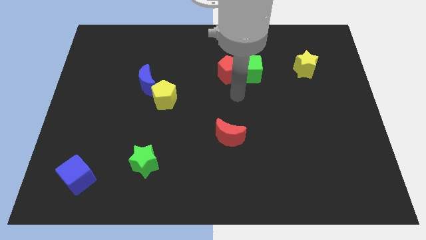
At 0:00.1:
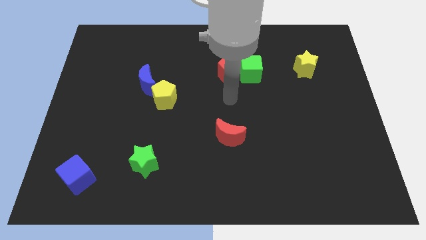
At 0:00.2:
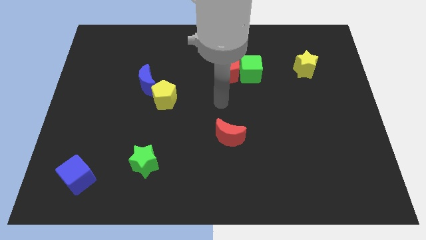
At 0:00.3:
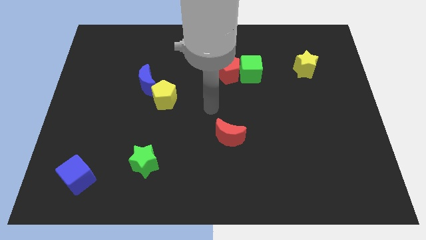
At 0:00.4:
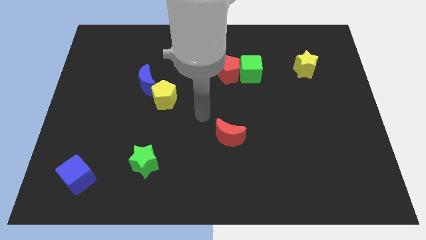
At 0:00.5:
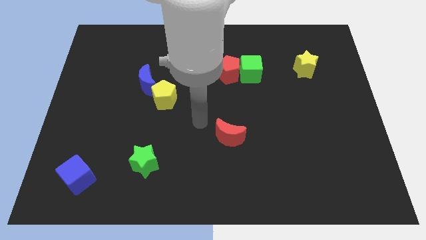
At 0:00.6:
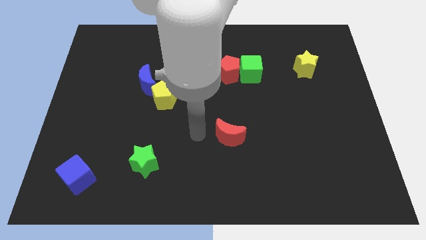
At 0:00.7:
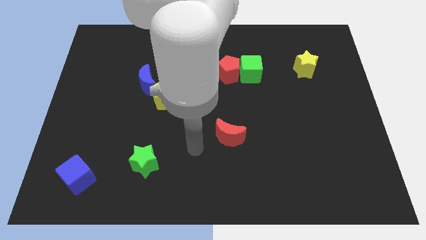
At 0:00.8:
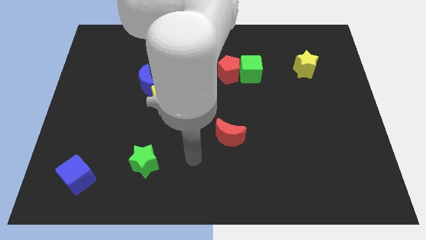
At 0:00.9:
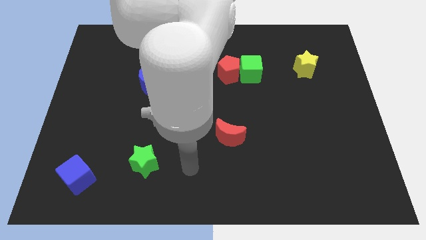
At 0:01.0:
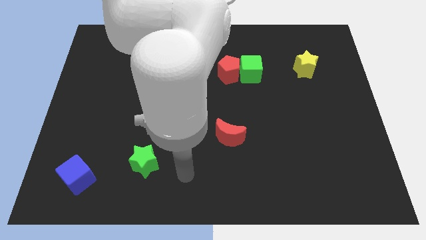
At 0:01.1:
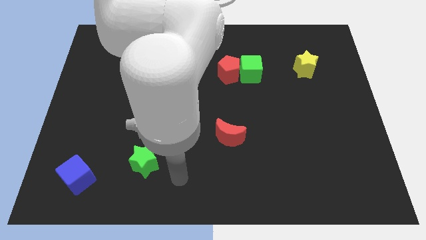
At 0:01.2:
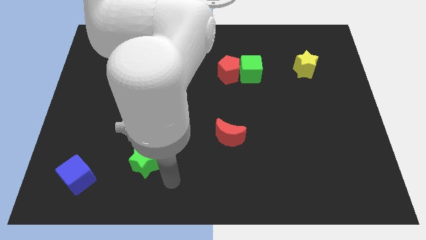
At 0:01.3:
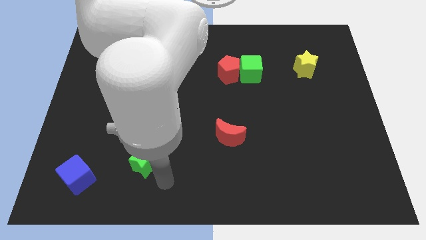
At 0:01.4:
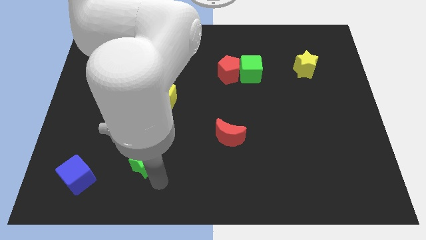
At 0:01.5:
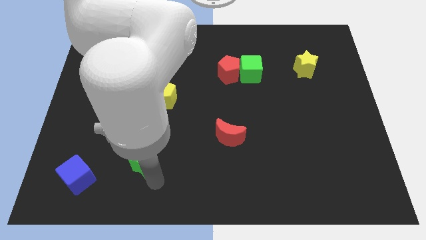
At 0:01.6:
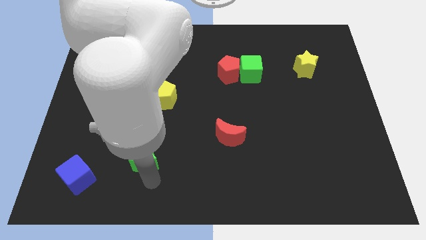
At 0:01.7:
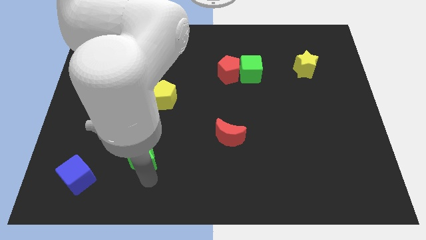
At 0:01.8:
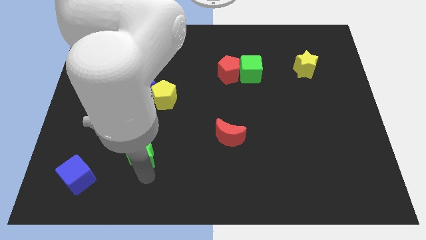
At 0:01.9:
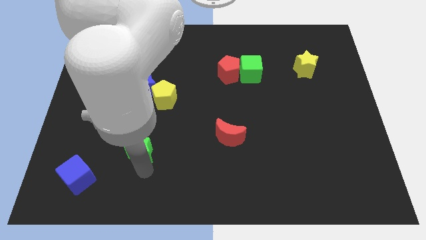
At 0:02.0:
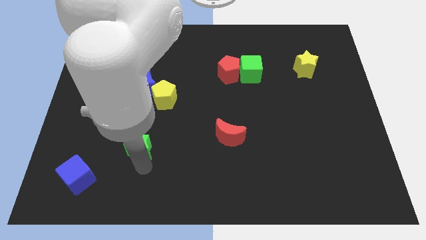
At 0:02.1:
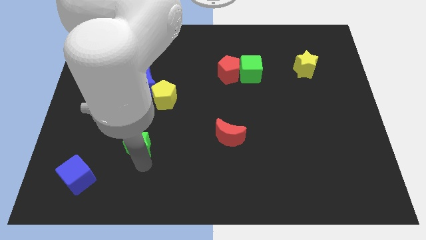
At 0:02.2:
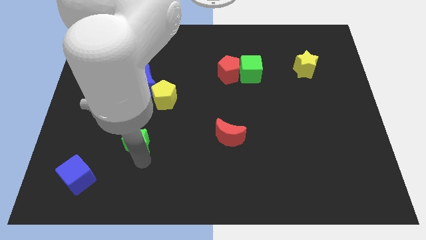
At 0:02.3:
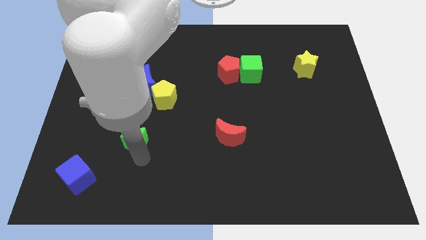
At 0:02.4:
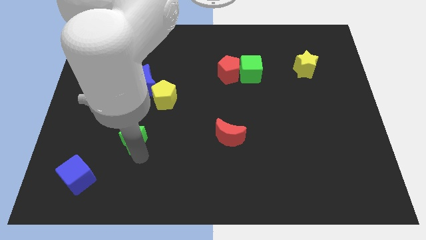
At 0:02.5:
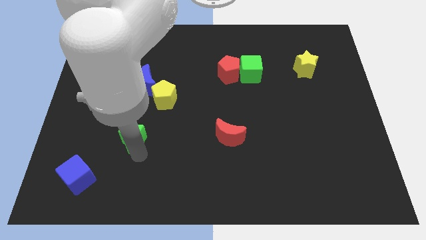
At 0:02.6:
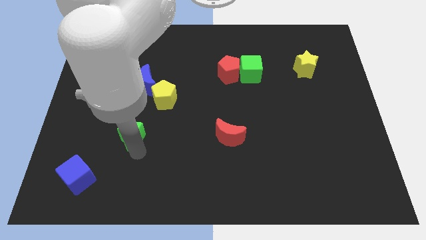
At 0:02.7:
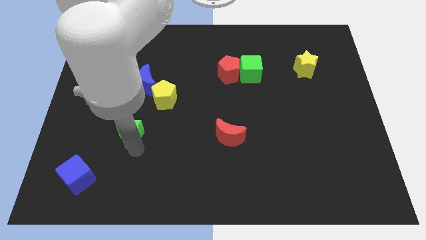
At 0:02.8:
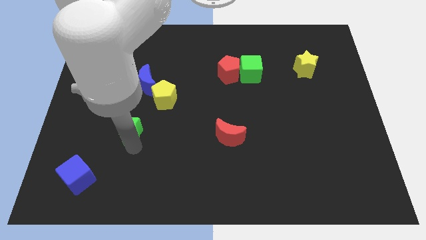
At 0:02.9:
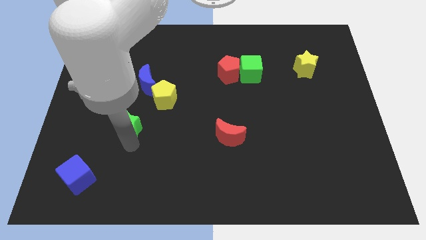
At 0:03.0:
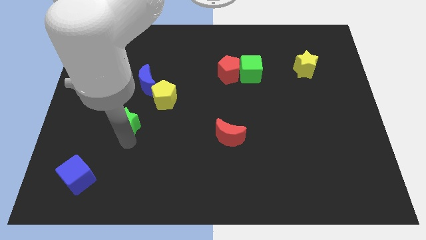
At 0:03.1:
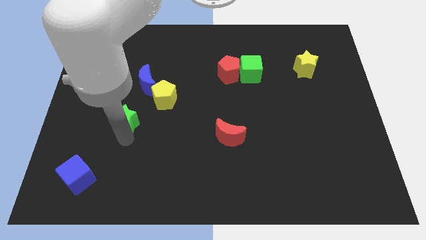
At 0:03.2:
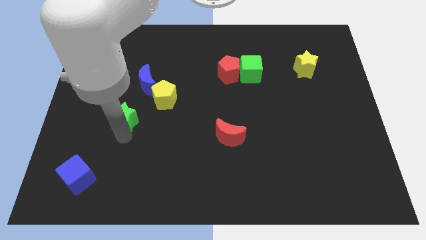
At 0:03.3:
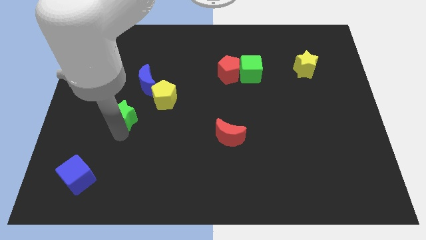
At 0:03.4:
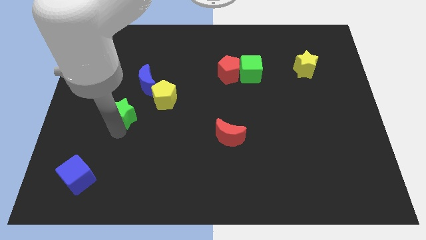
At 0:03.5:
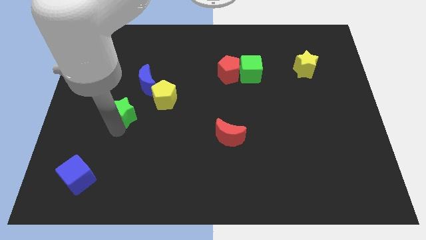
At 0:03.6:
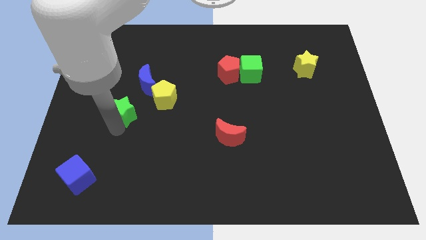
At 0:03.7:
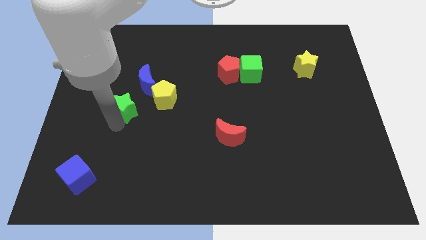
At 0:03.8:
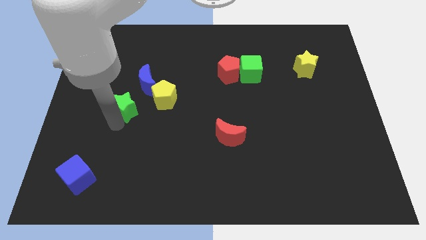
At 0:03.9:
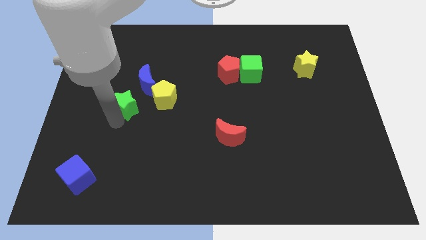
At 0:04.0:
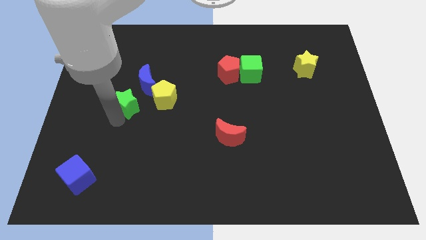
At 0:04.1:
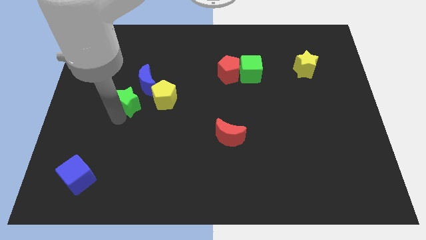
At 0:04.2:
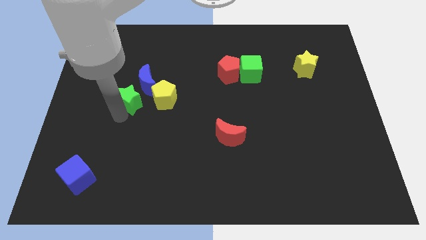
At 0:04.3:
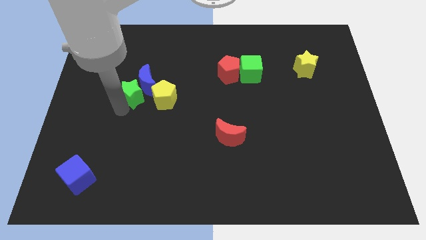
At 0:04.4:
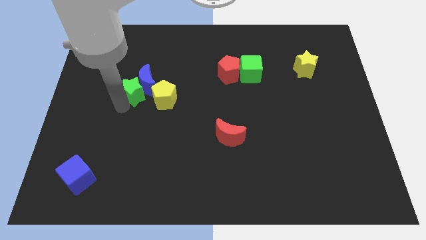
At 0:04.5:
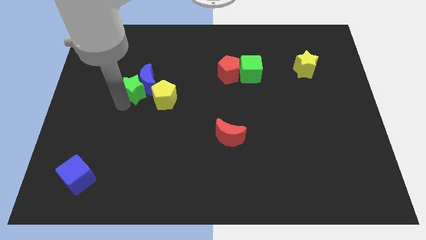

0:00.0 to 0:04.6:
move the green star to the blue moon

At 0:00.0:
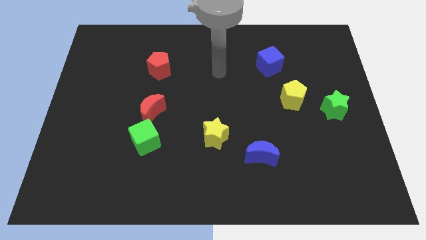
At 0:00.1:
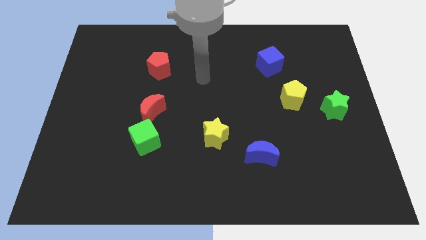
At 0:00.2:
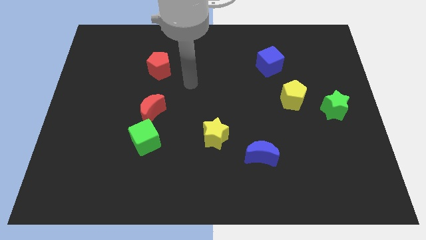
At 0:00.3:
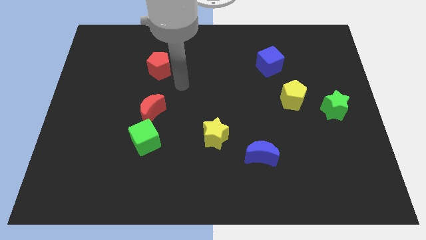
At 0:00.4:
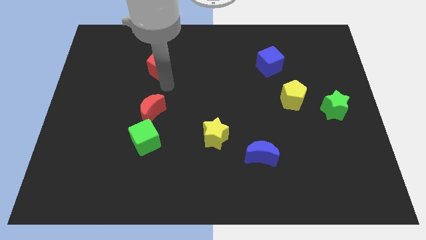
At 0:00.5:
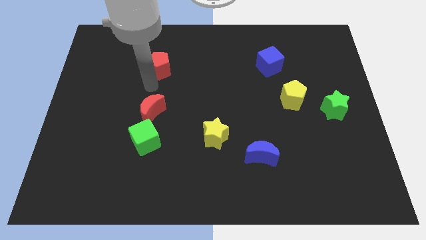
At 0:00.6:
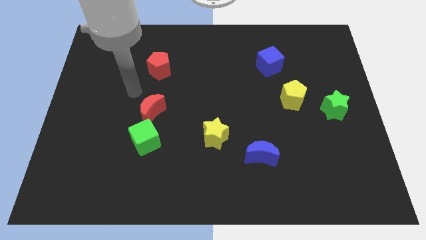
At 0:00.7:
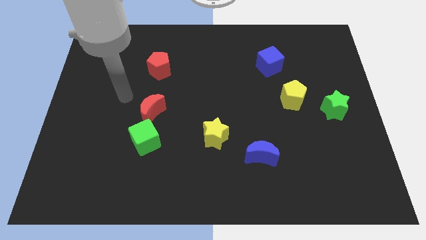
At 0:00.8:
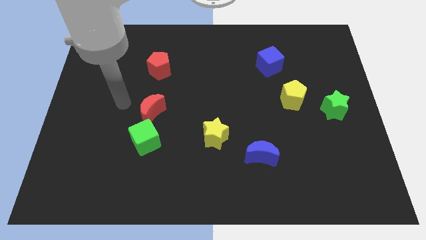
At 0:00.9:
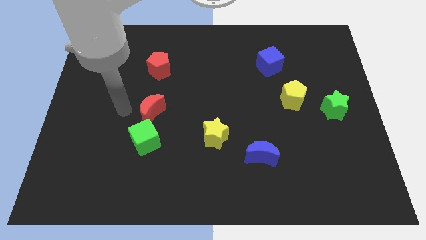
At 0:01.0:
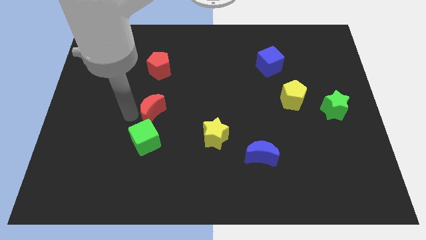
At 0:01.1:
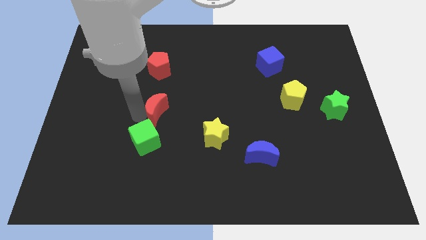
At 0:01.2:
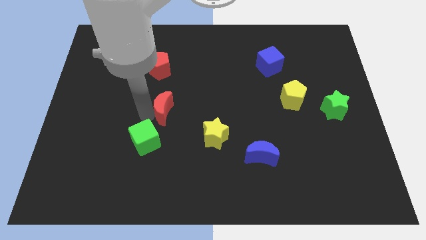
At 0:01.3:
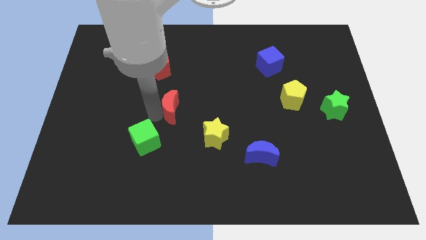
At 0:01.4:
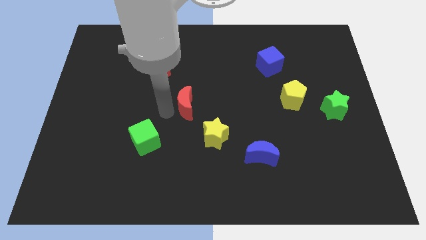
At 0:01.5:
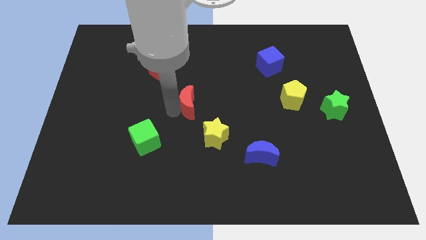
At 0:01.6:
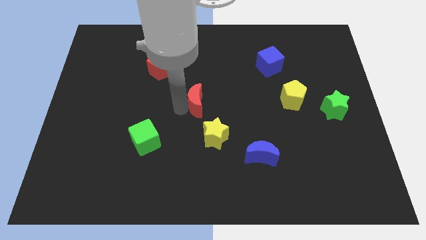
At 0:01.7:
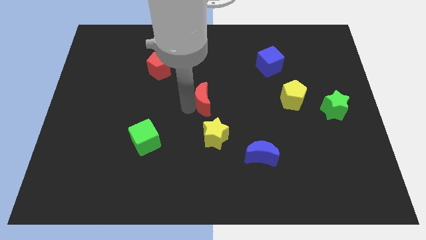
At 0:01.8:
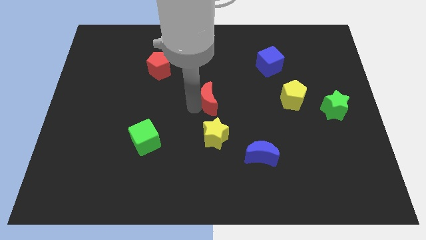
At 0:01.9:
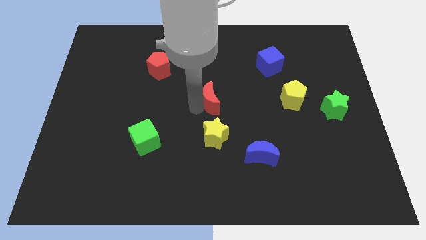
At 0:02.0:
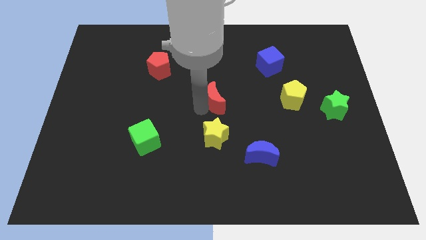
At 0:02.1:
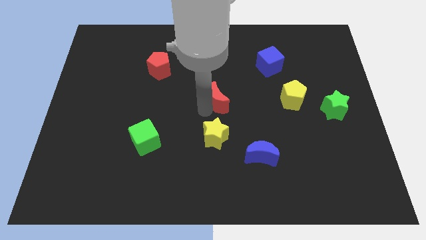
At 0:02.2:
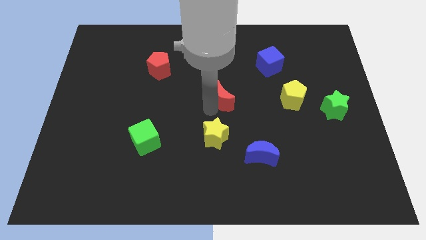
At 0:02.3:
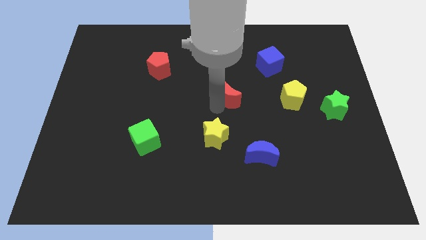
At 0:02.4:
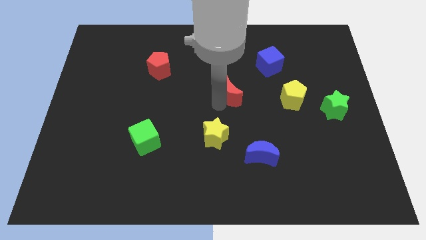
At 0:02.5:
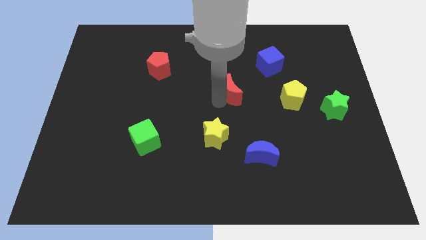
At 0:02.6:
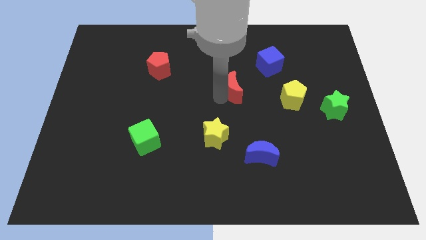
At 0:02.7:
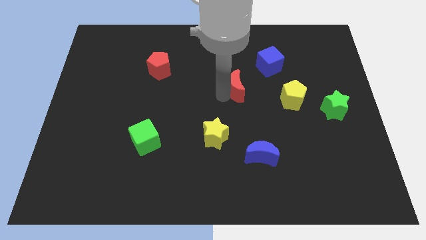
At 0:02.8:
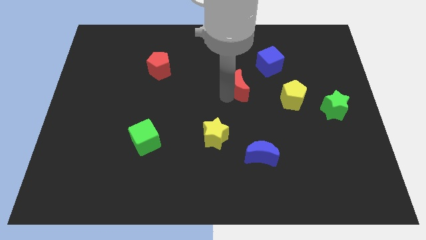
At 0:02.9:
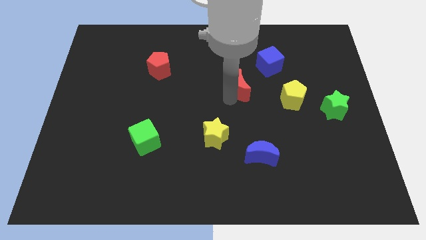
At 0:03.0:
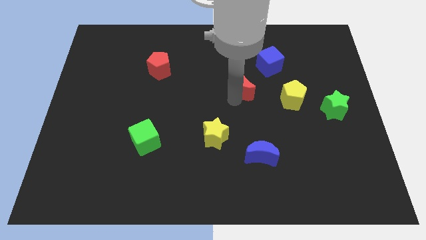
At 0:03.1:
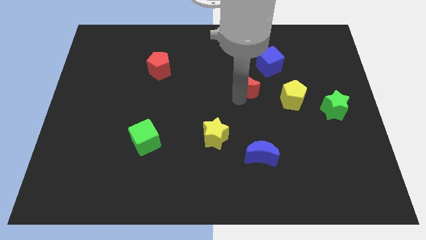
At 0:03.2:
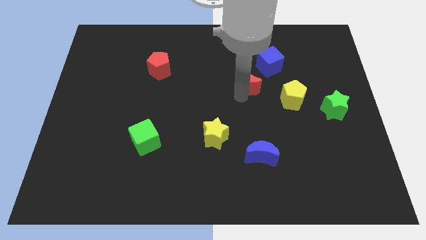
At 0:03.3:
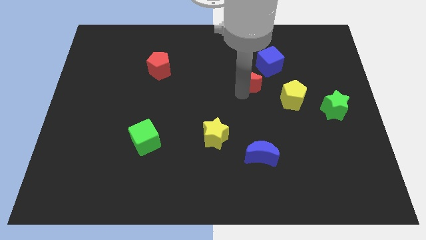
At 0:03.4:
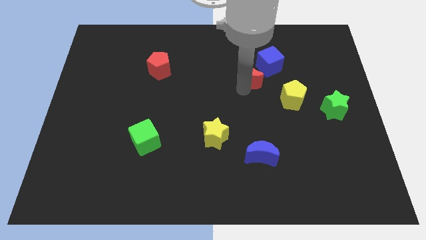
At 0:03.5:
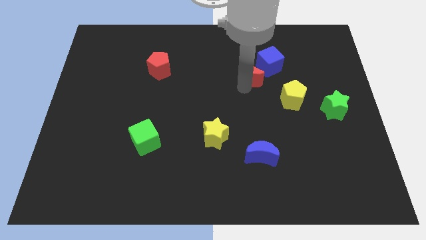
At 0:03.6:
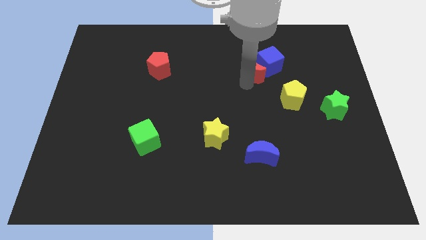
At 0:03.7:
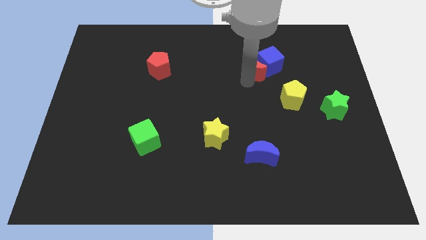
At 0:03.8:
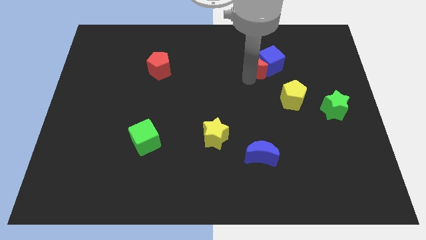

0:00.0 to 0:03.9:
put the red moon towards the blue cube
